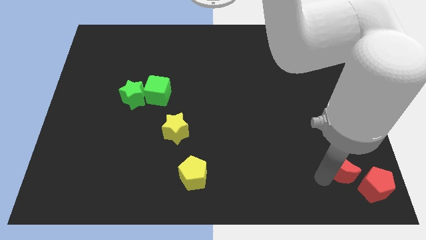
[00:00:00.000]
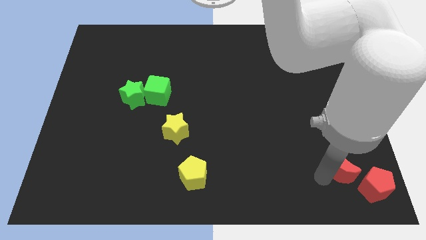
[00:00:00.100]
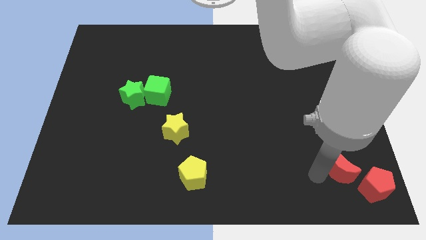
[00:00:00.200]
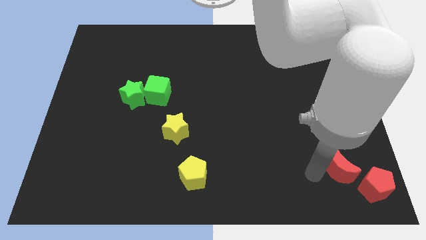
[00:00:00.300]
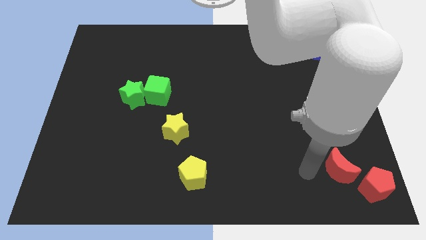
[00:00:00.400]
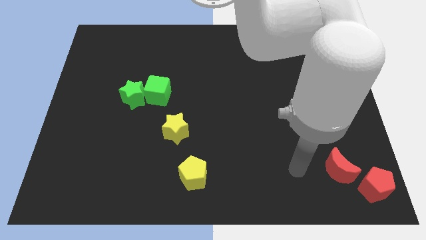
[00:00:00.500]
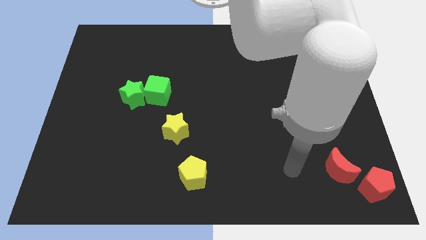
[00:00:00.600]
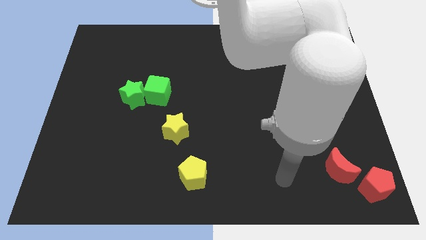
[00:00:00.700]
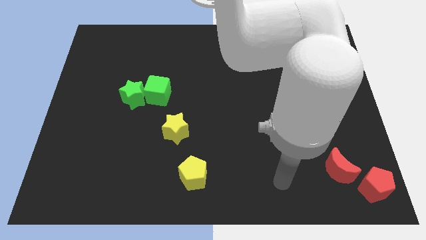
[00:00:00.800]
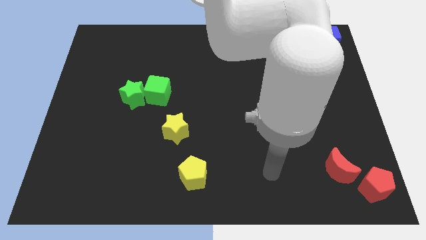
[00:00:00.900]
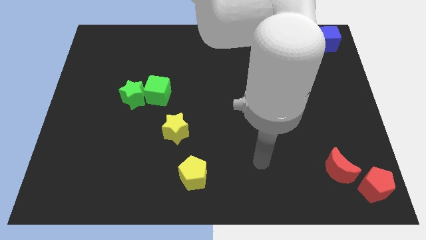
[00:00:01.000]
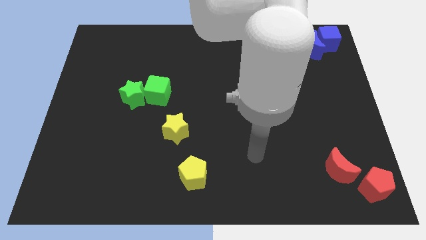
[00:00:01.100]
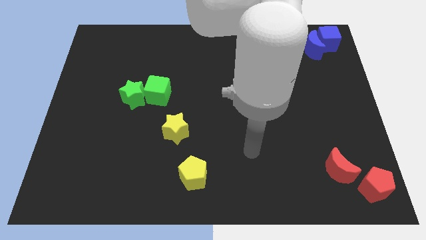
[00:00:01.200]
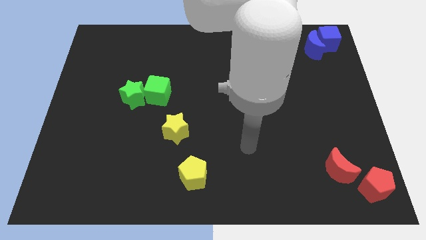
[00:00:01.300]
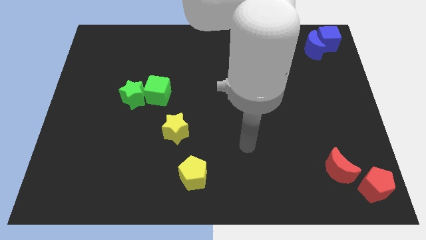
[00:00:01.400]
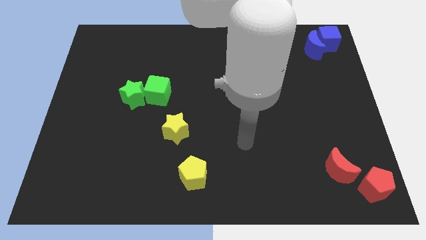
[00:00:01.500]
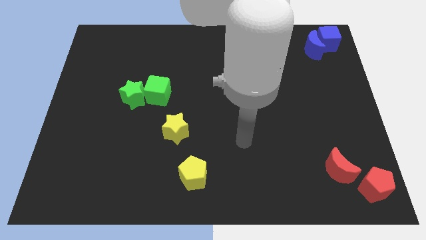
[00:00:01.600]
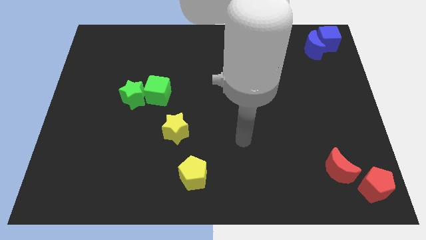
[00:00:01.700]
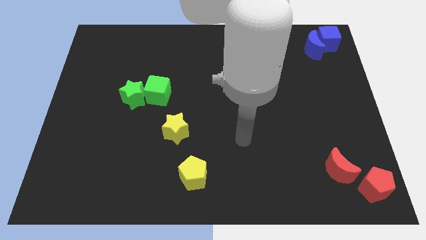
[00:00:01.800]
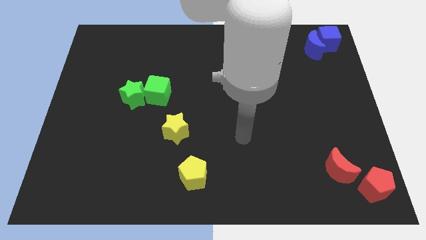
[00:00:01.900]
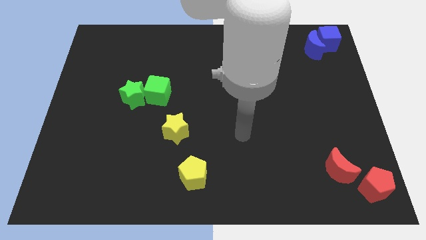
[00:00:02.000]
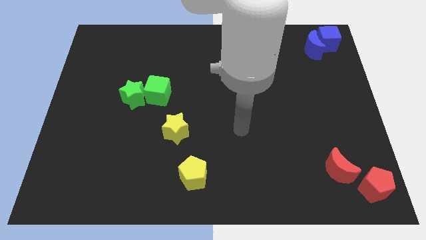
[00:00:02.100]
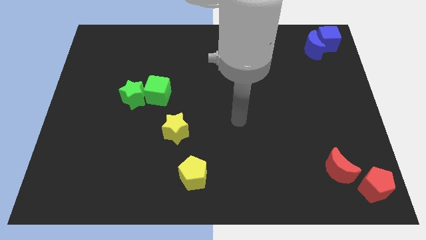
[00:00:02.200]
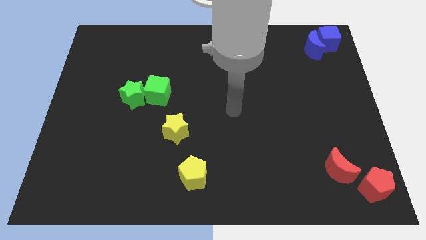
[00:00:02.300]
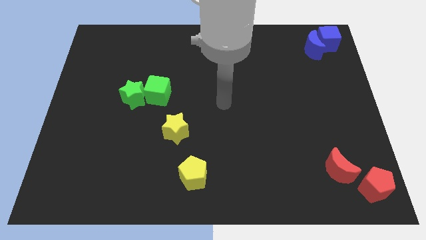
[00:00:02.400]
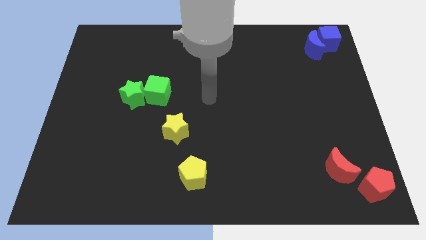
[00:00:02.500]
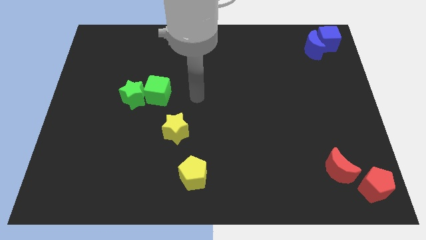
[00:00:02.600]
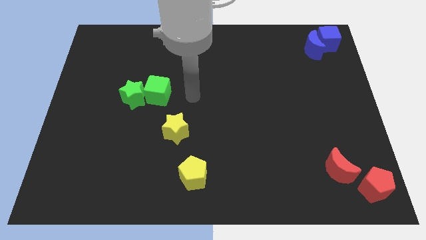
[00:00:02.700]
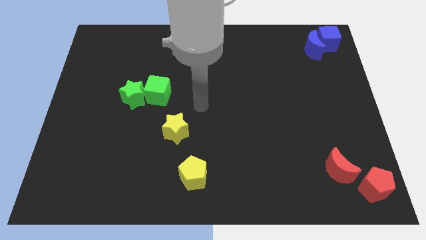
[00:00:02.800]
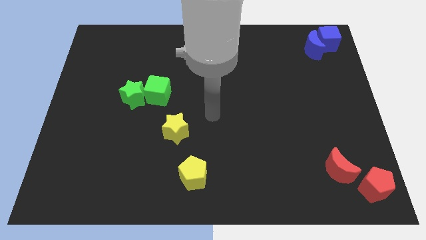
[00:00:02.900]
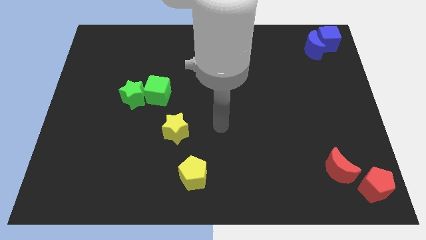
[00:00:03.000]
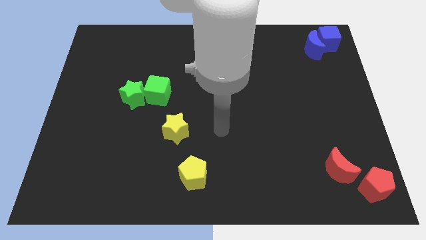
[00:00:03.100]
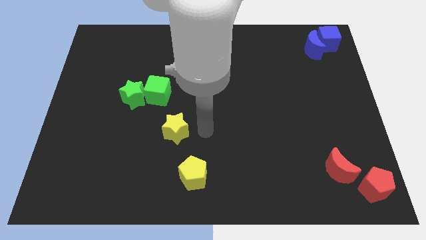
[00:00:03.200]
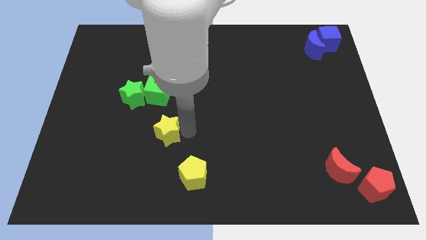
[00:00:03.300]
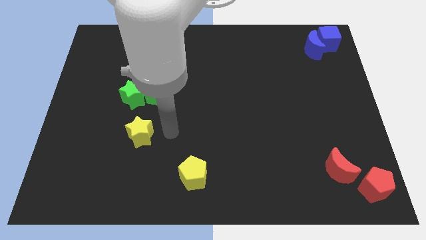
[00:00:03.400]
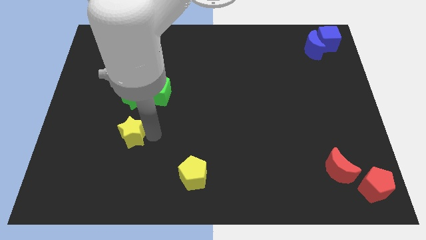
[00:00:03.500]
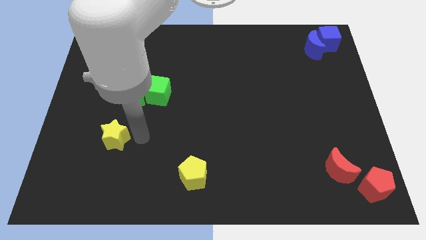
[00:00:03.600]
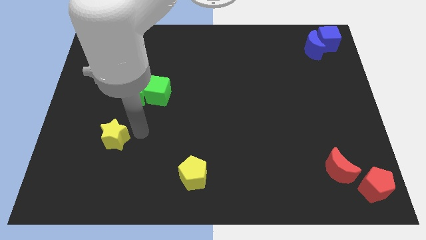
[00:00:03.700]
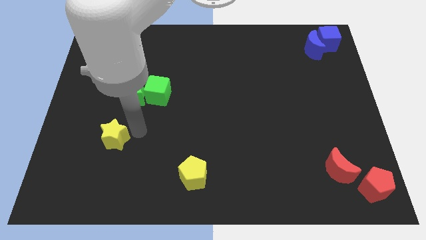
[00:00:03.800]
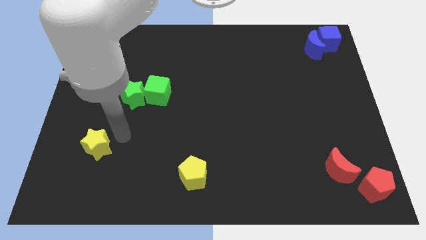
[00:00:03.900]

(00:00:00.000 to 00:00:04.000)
move yellow star to the center left

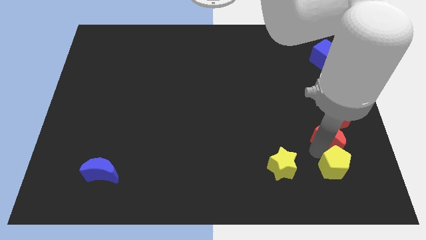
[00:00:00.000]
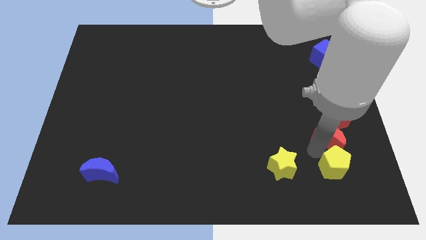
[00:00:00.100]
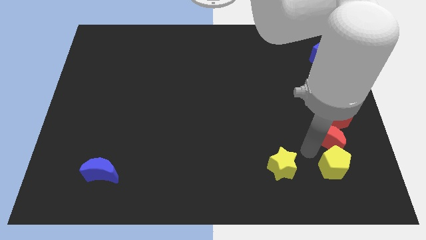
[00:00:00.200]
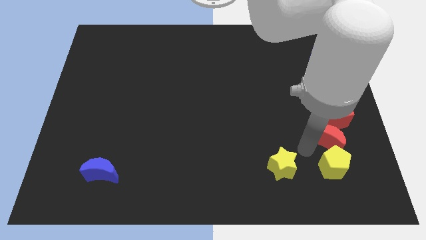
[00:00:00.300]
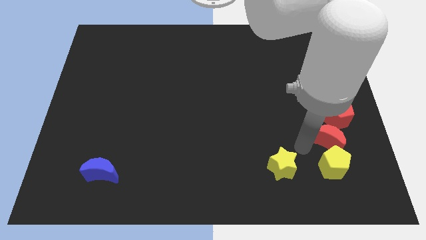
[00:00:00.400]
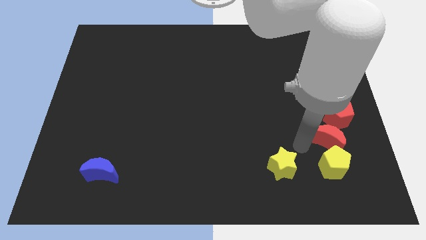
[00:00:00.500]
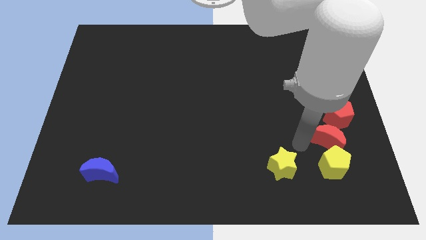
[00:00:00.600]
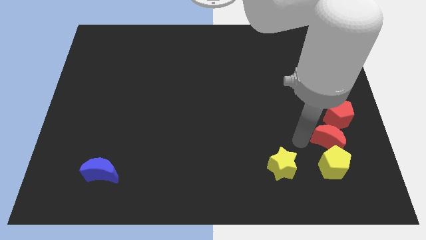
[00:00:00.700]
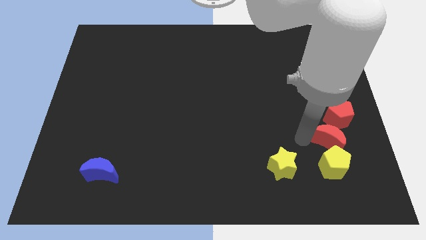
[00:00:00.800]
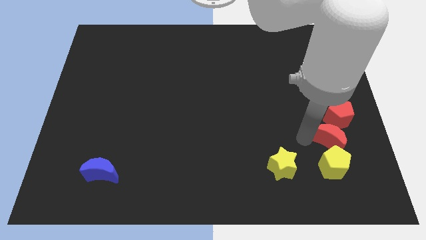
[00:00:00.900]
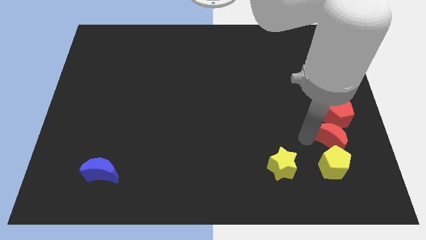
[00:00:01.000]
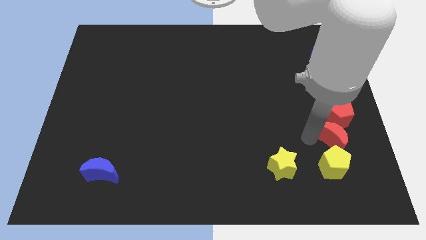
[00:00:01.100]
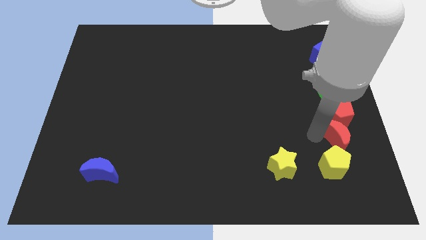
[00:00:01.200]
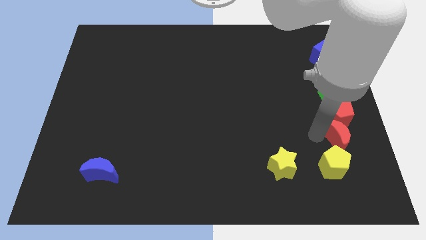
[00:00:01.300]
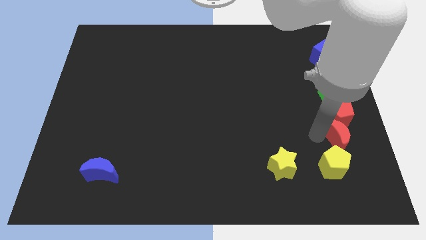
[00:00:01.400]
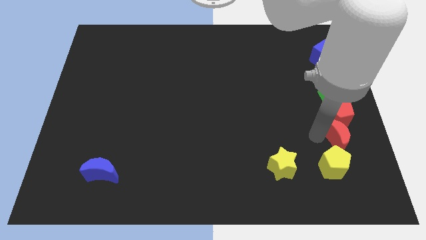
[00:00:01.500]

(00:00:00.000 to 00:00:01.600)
move the red crescent to the bottom of the red pentagon

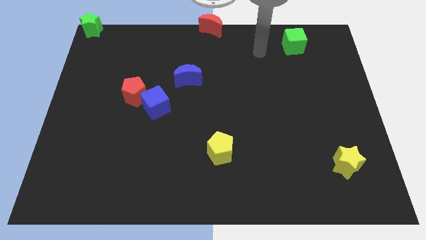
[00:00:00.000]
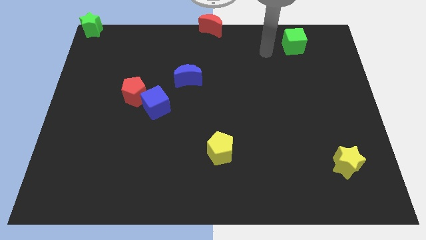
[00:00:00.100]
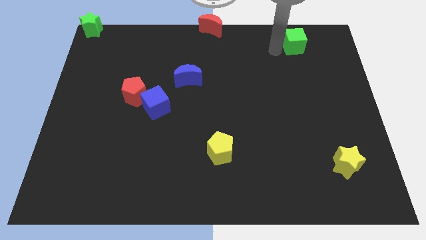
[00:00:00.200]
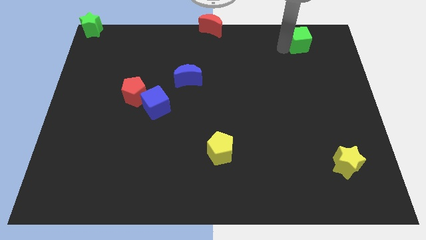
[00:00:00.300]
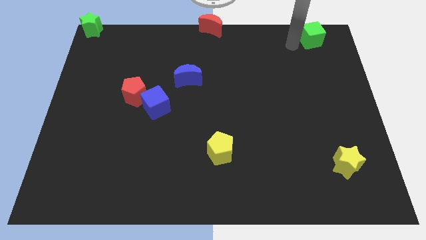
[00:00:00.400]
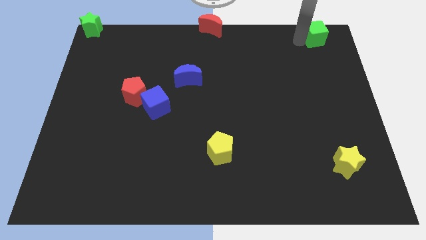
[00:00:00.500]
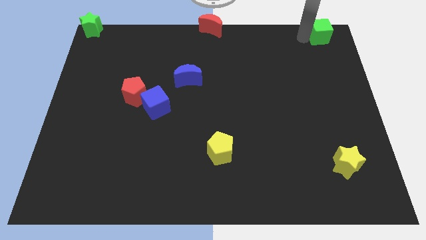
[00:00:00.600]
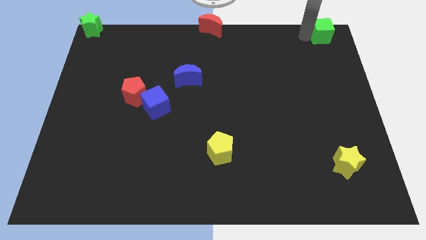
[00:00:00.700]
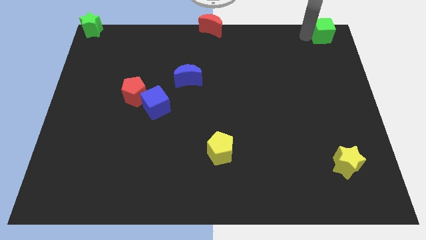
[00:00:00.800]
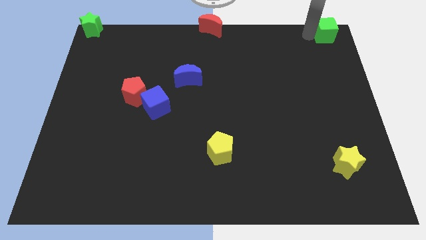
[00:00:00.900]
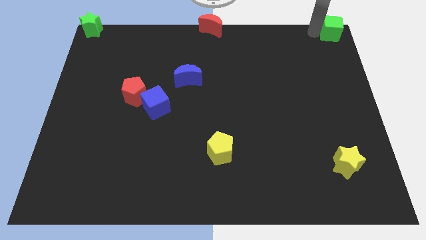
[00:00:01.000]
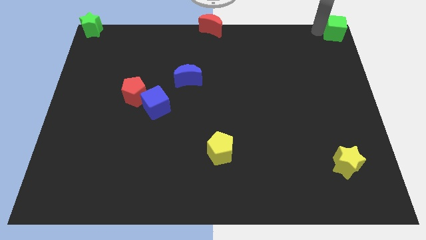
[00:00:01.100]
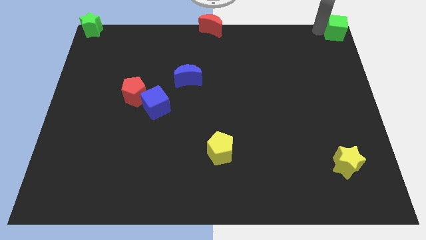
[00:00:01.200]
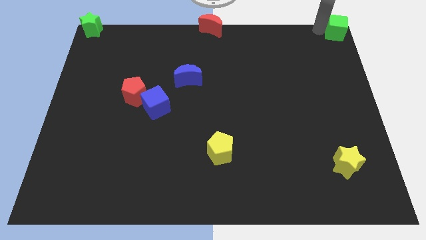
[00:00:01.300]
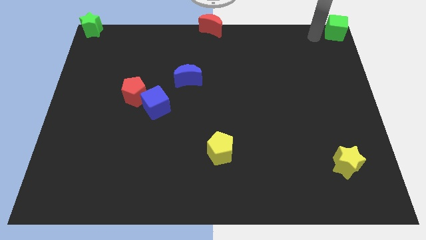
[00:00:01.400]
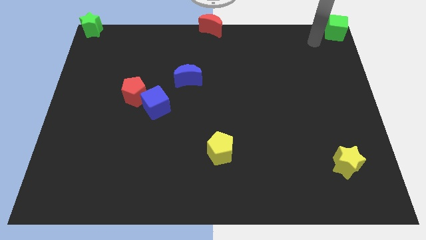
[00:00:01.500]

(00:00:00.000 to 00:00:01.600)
place green cube to the top right corner of the board

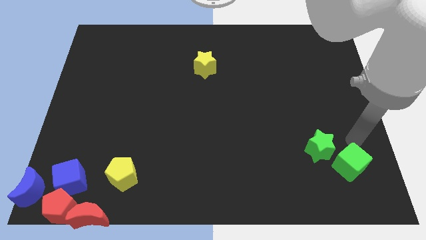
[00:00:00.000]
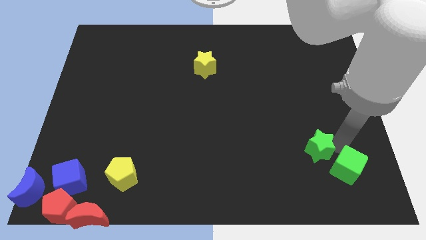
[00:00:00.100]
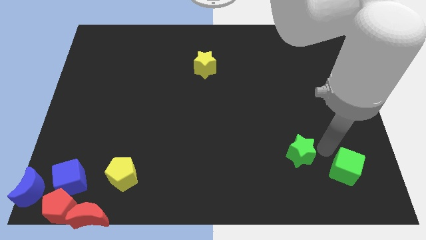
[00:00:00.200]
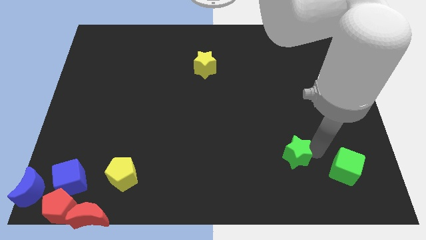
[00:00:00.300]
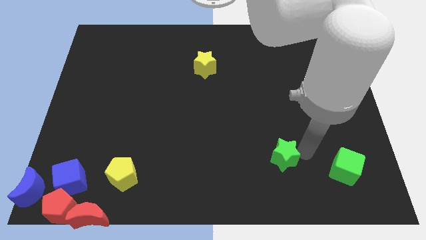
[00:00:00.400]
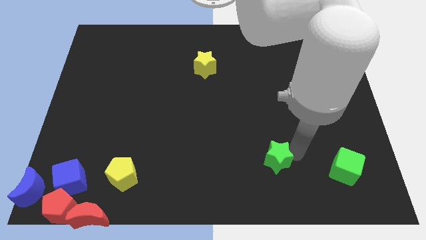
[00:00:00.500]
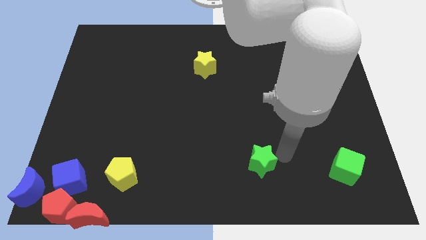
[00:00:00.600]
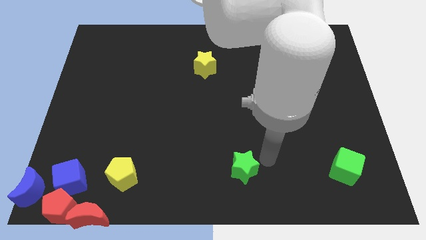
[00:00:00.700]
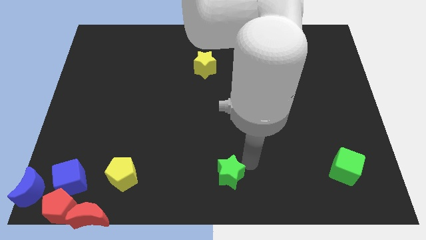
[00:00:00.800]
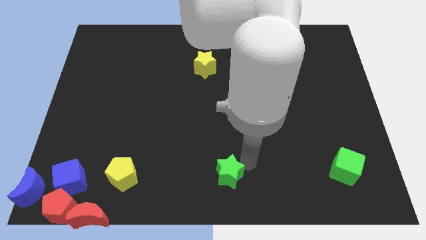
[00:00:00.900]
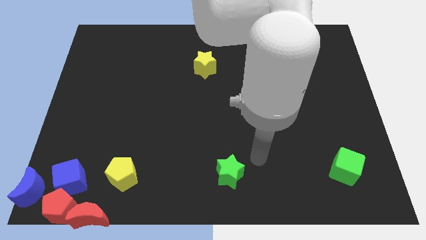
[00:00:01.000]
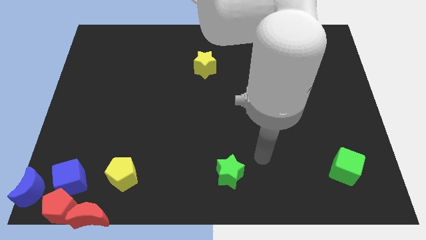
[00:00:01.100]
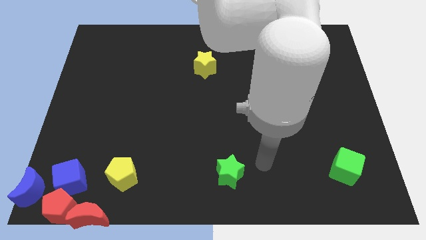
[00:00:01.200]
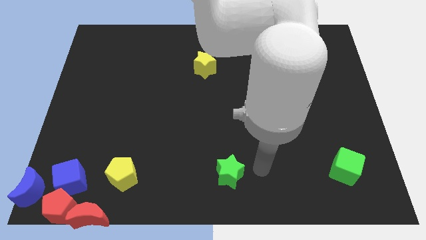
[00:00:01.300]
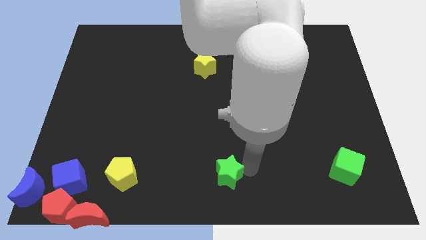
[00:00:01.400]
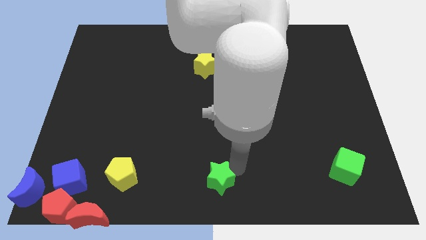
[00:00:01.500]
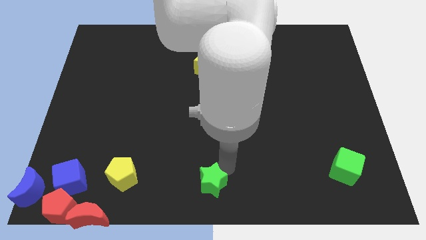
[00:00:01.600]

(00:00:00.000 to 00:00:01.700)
place the green star at the bottom center of the board
